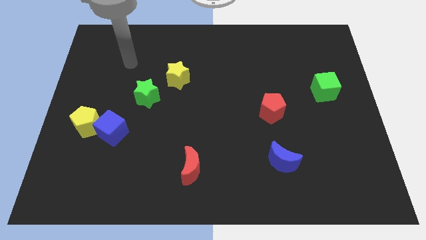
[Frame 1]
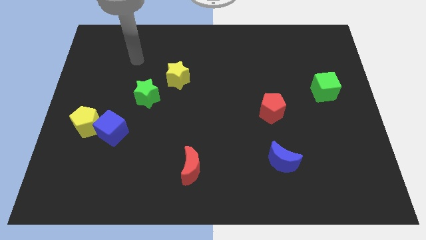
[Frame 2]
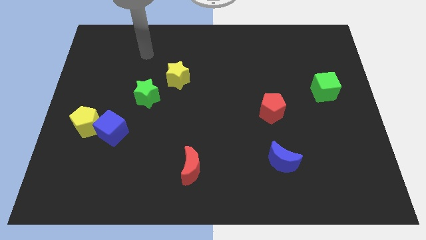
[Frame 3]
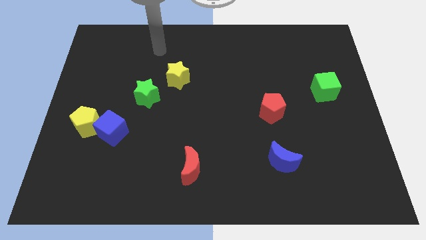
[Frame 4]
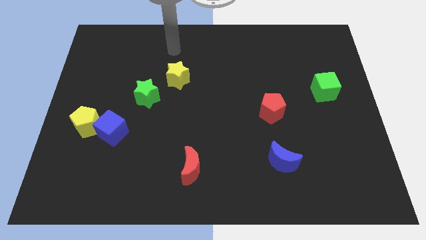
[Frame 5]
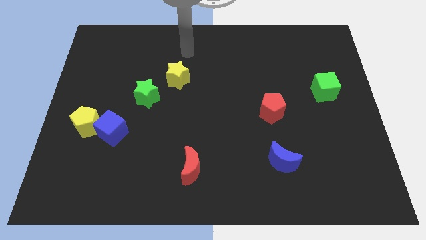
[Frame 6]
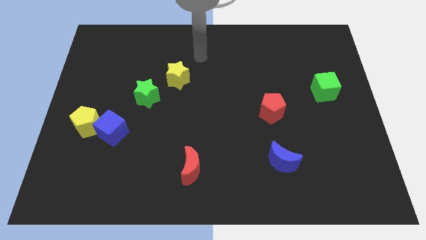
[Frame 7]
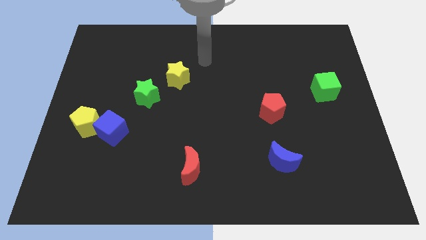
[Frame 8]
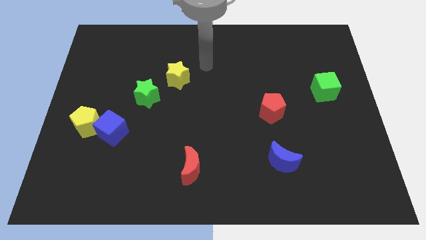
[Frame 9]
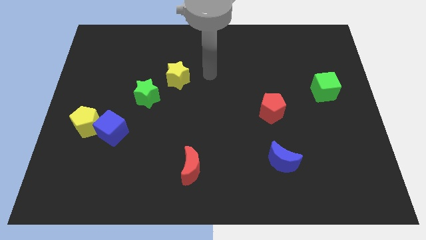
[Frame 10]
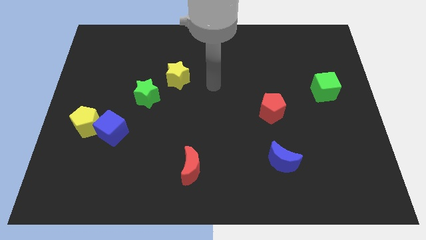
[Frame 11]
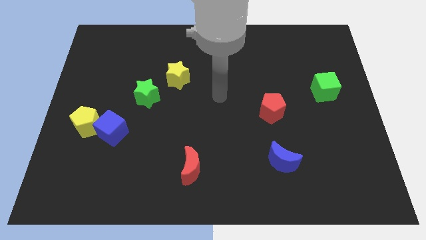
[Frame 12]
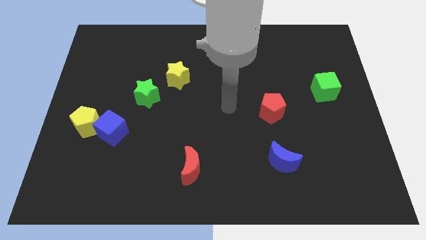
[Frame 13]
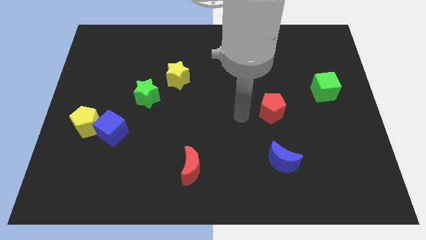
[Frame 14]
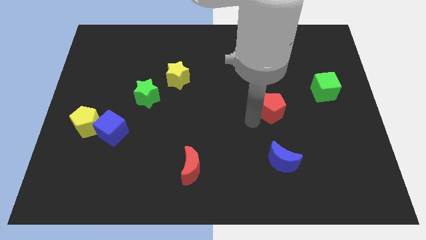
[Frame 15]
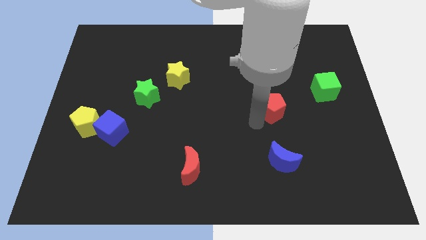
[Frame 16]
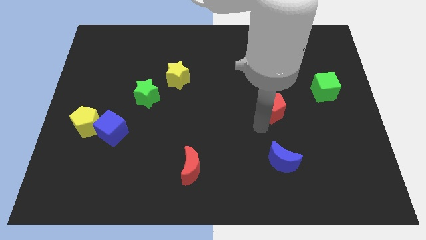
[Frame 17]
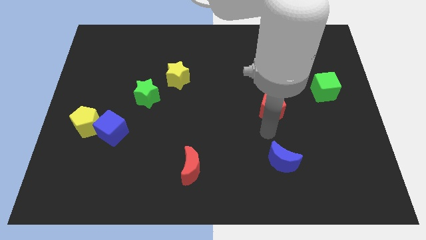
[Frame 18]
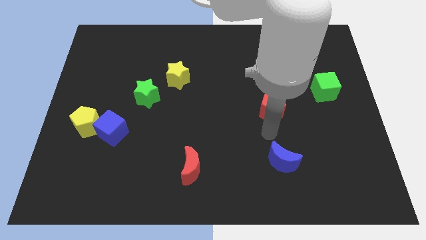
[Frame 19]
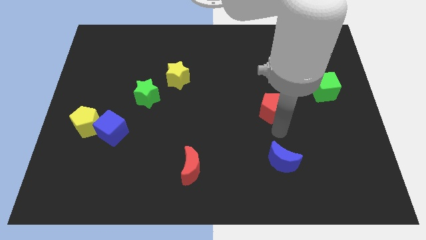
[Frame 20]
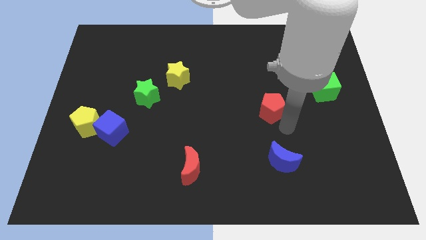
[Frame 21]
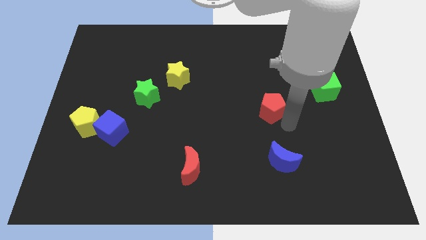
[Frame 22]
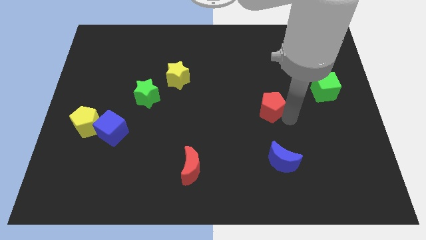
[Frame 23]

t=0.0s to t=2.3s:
move your arm and point below red pentagon

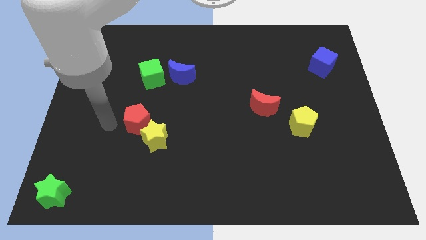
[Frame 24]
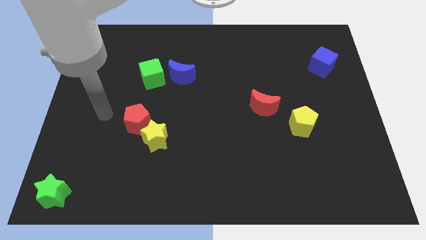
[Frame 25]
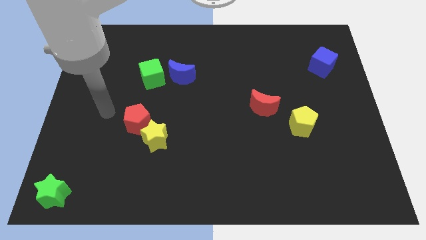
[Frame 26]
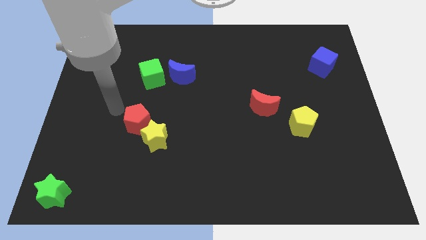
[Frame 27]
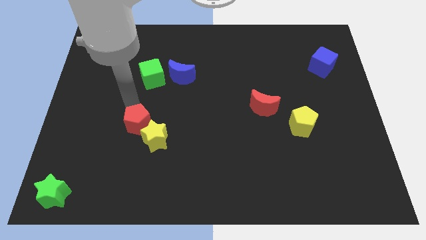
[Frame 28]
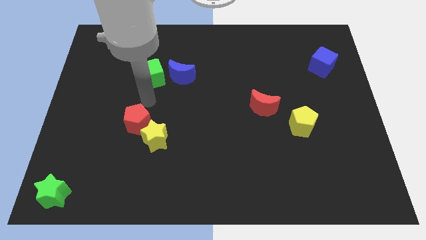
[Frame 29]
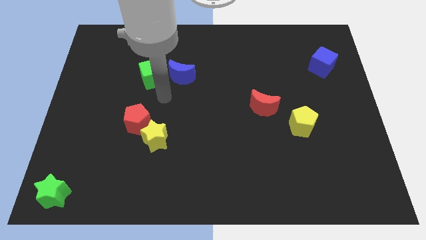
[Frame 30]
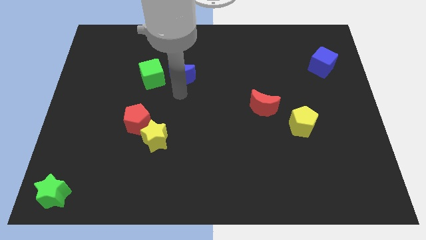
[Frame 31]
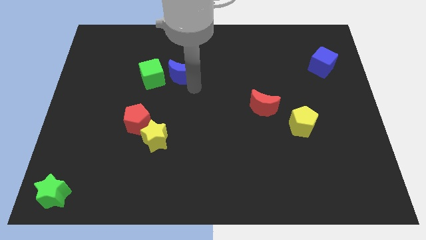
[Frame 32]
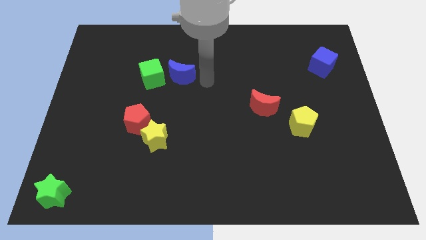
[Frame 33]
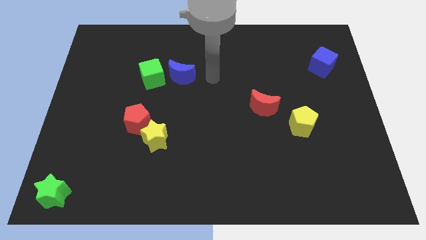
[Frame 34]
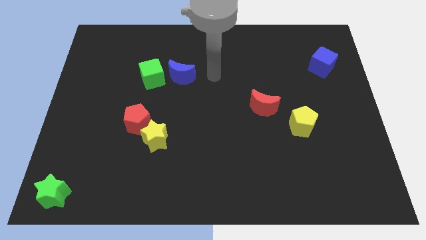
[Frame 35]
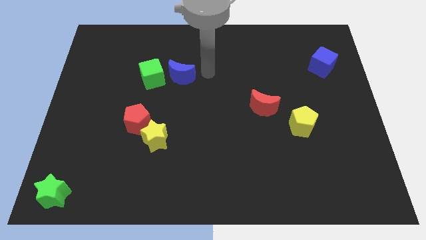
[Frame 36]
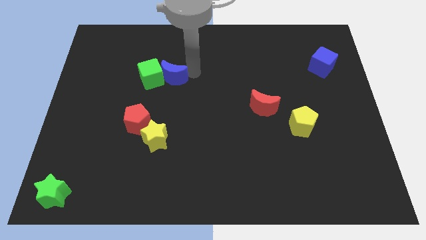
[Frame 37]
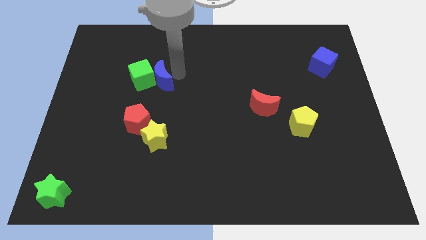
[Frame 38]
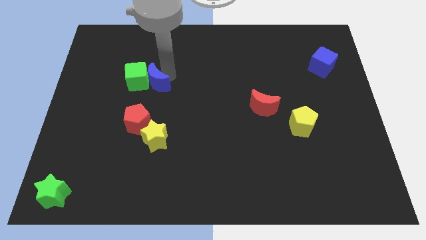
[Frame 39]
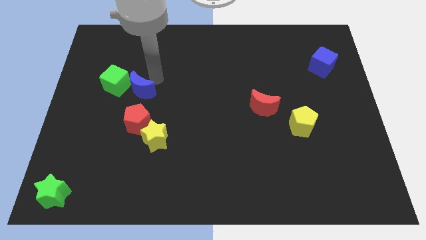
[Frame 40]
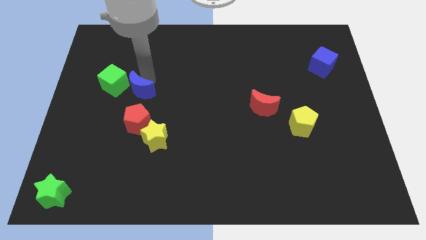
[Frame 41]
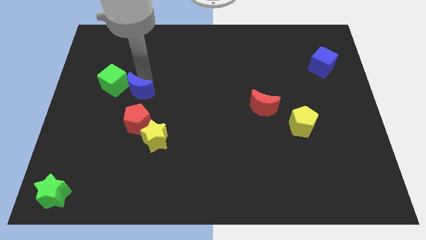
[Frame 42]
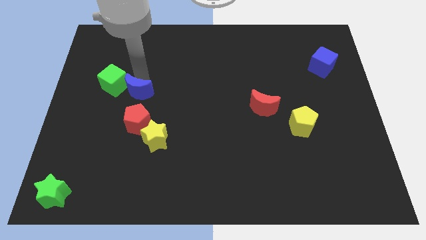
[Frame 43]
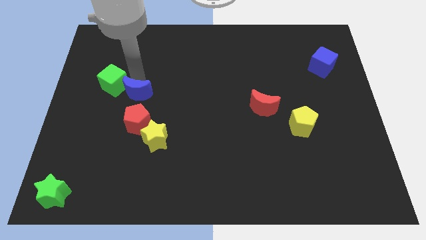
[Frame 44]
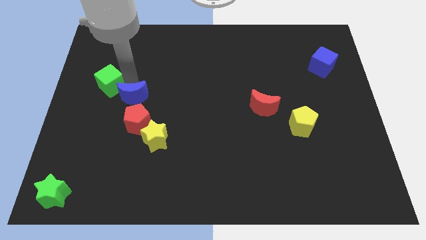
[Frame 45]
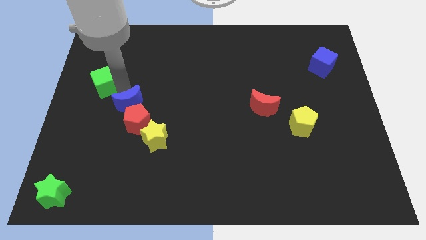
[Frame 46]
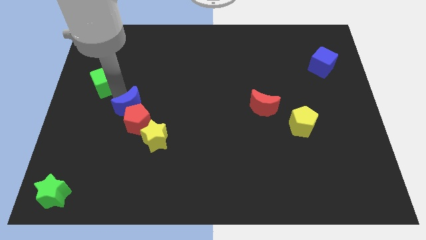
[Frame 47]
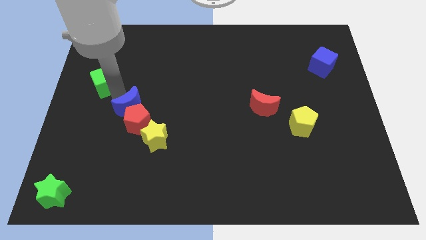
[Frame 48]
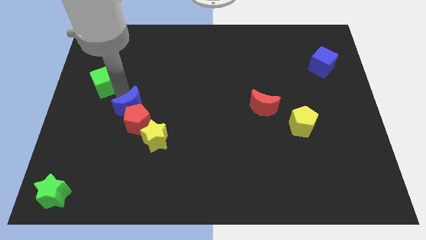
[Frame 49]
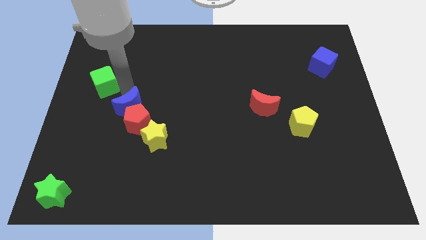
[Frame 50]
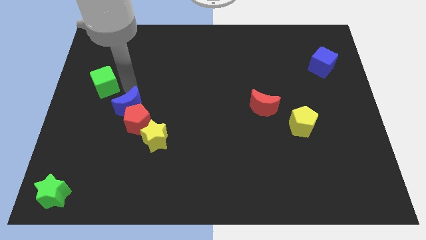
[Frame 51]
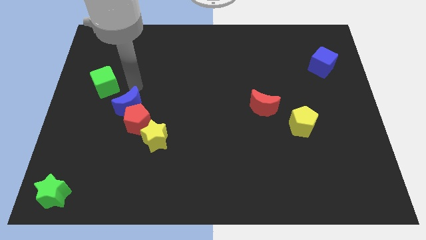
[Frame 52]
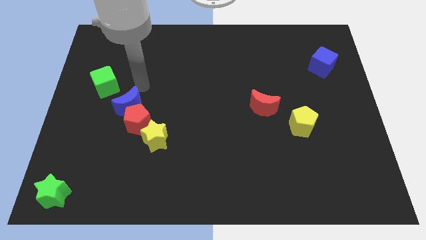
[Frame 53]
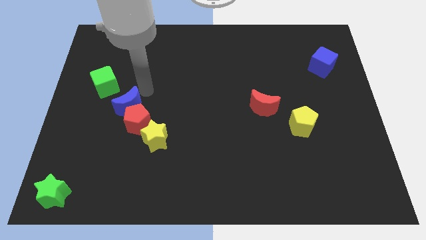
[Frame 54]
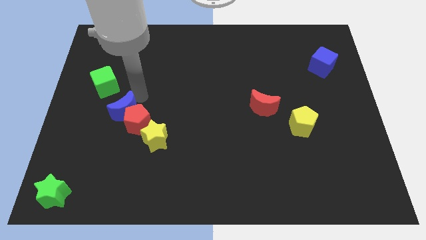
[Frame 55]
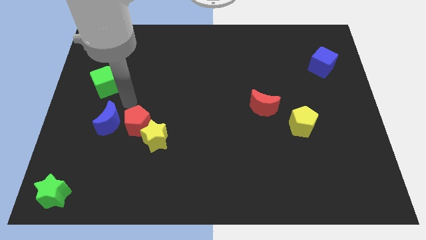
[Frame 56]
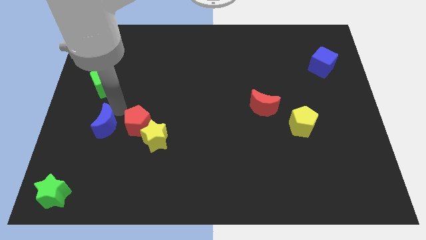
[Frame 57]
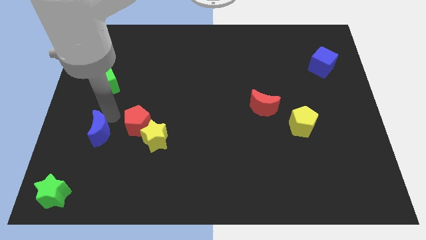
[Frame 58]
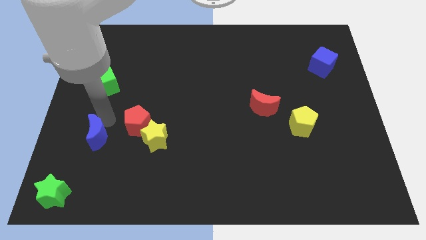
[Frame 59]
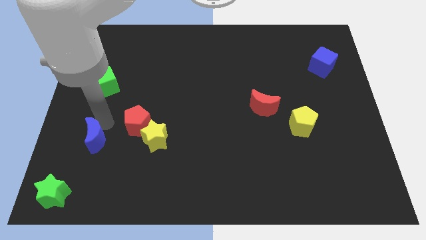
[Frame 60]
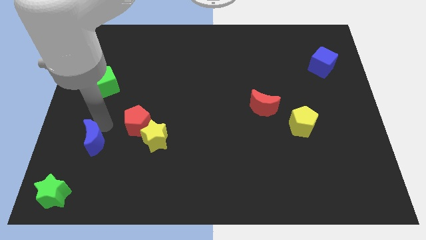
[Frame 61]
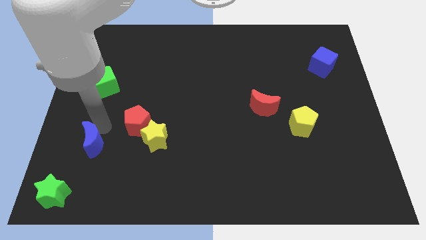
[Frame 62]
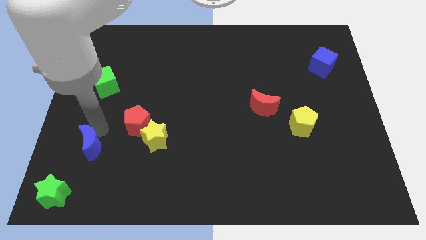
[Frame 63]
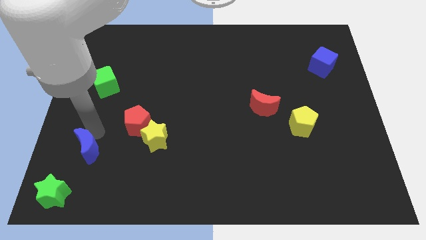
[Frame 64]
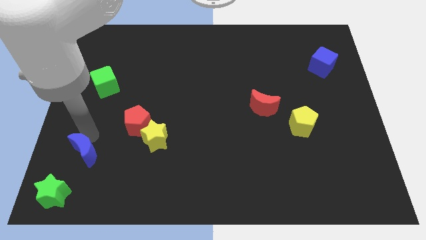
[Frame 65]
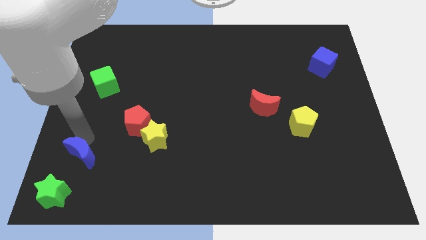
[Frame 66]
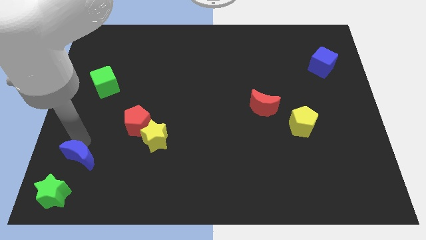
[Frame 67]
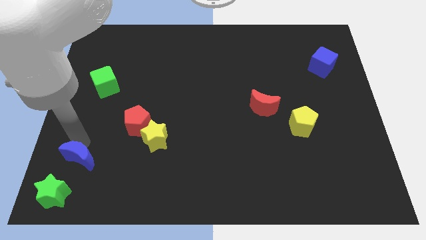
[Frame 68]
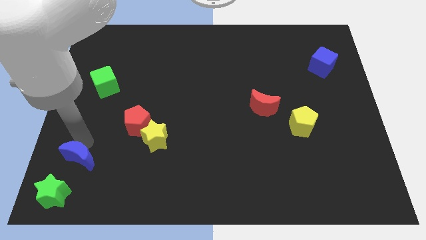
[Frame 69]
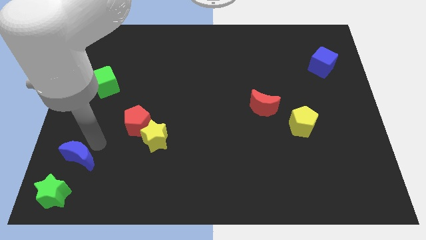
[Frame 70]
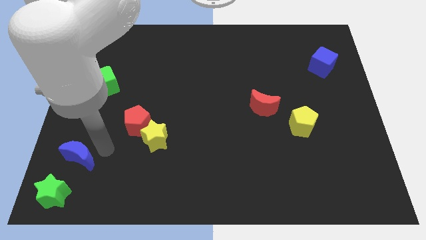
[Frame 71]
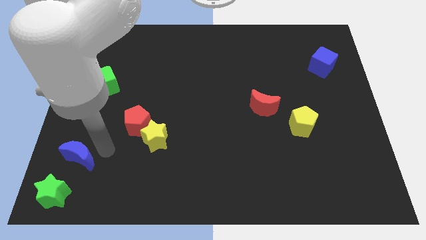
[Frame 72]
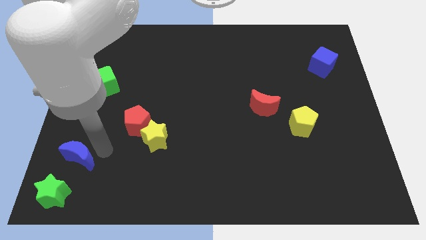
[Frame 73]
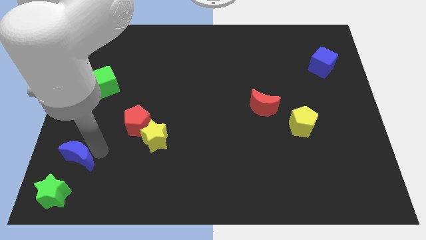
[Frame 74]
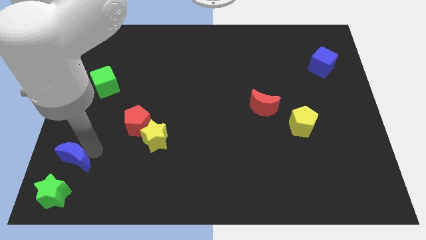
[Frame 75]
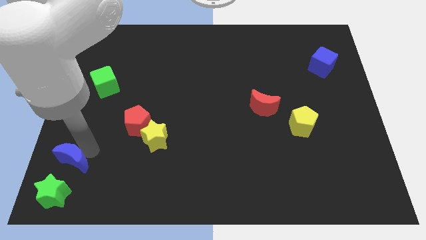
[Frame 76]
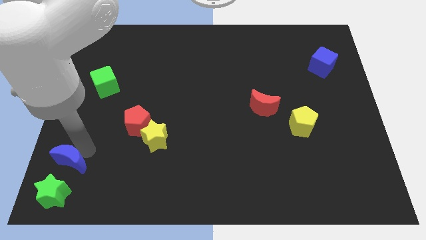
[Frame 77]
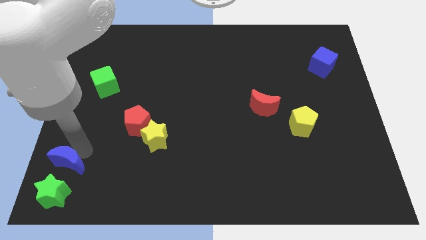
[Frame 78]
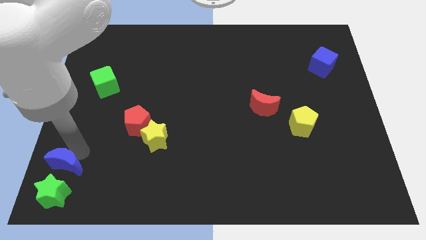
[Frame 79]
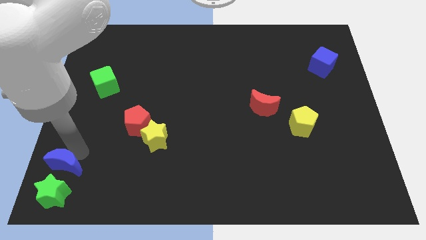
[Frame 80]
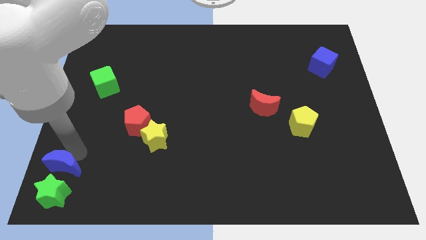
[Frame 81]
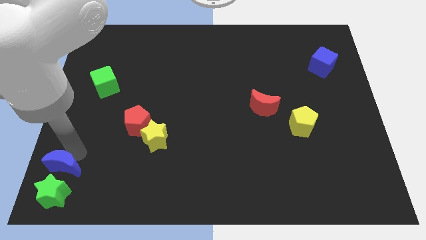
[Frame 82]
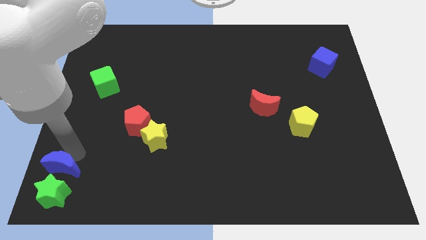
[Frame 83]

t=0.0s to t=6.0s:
move the blue moon above green star

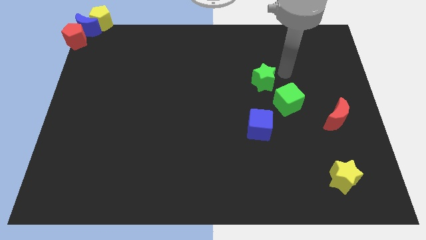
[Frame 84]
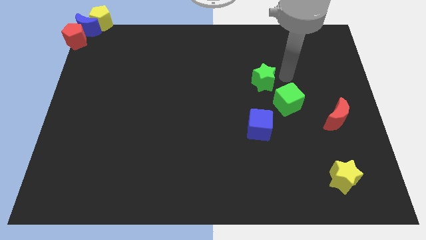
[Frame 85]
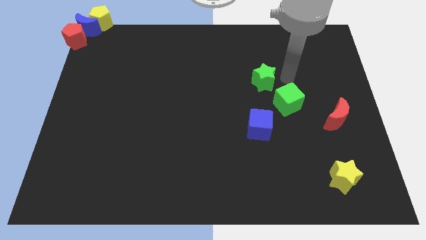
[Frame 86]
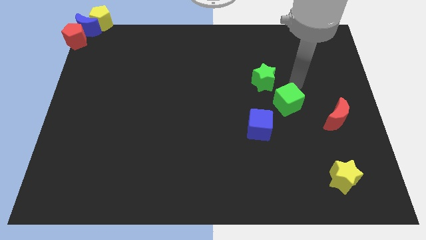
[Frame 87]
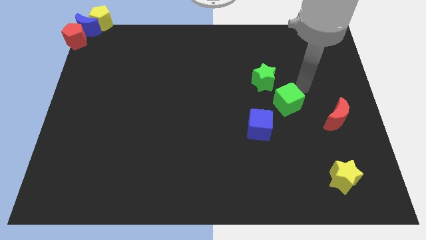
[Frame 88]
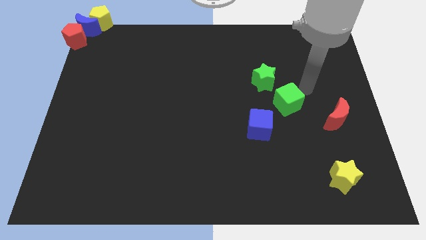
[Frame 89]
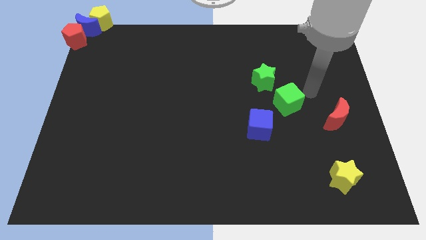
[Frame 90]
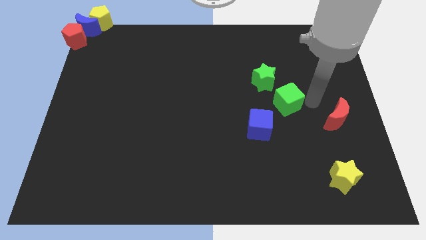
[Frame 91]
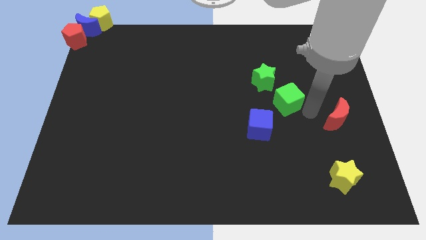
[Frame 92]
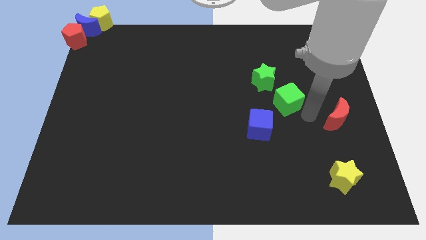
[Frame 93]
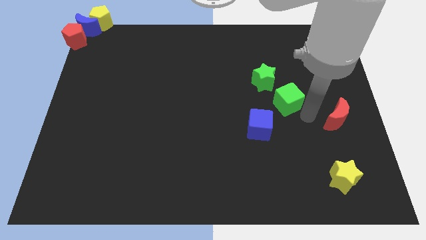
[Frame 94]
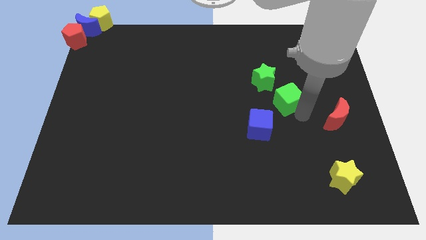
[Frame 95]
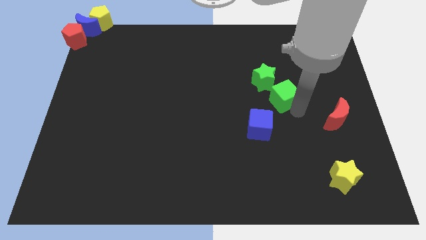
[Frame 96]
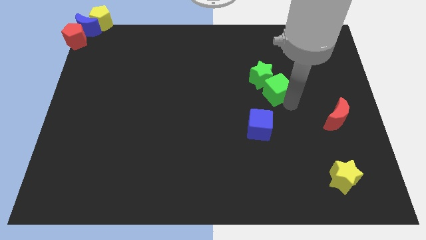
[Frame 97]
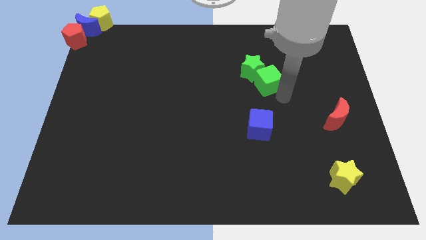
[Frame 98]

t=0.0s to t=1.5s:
push the green cube into green star
